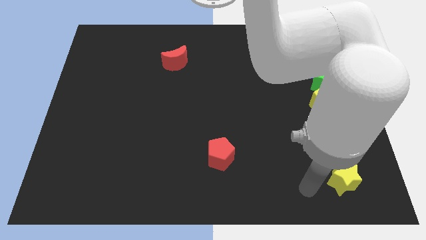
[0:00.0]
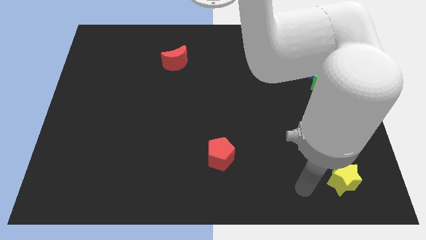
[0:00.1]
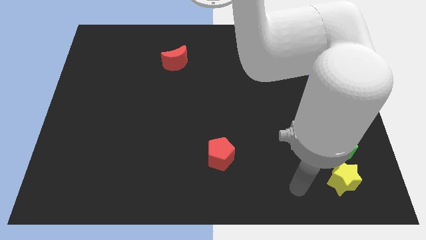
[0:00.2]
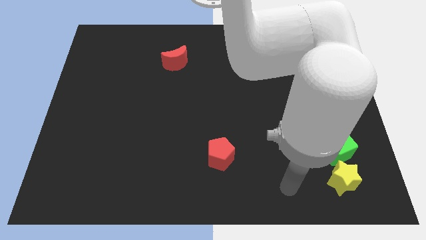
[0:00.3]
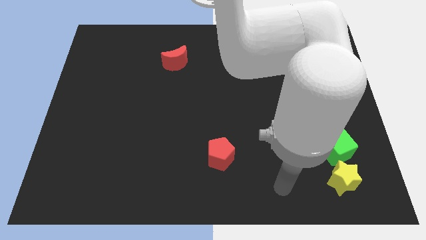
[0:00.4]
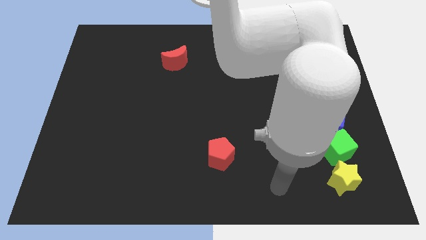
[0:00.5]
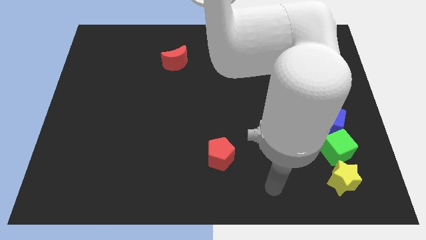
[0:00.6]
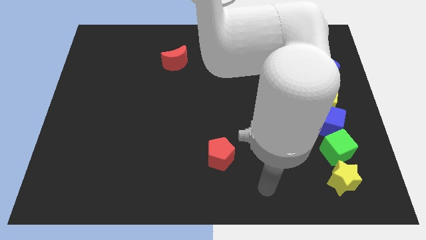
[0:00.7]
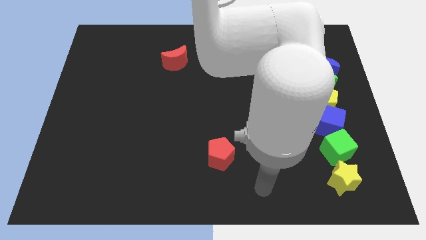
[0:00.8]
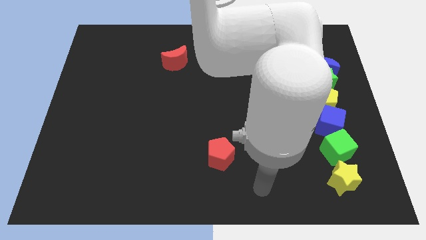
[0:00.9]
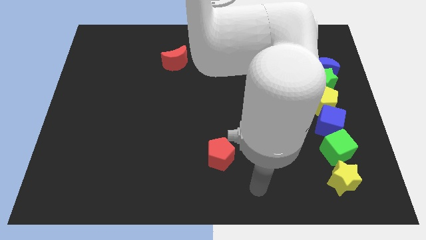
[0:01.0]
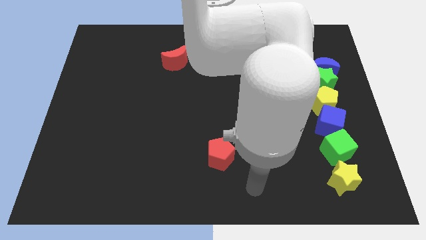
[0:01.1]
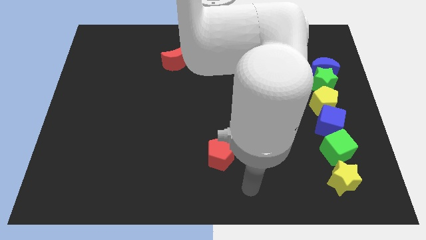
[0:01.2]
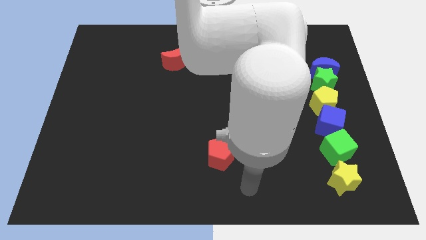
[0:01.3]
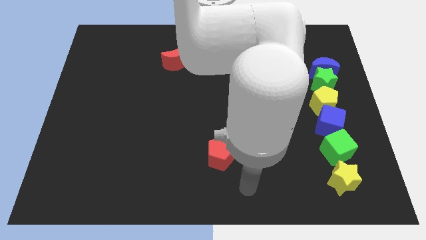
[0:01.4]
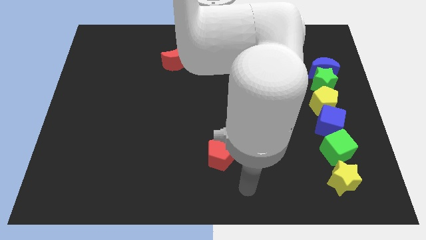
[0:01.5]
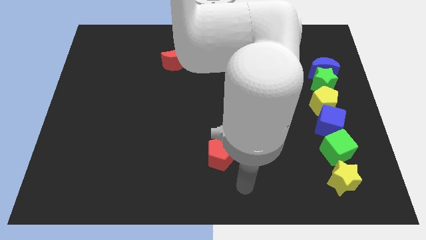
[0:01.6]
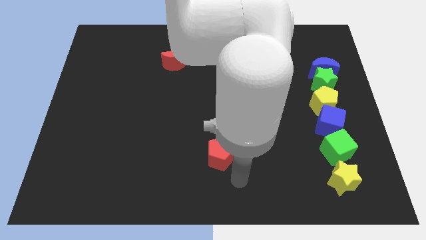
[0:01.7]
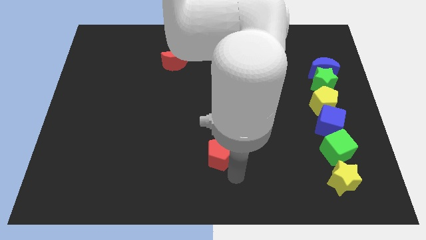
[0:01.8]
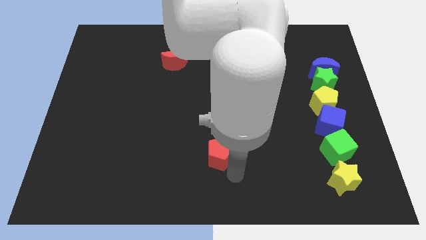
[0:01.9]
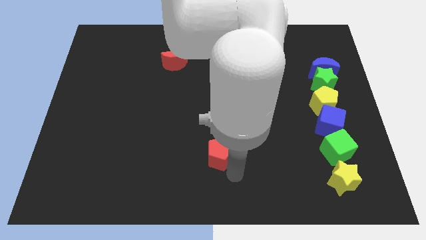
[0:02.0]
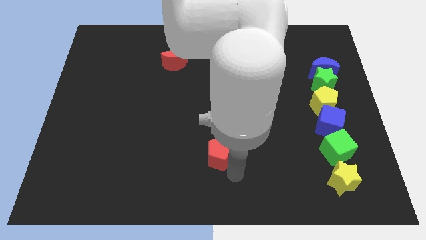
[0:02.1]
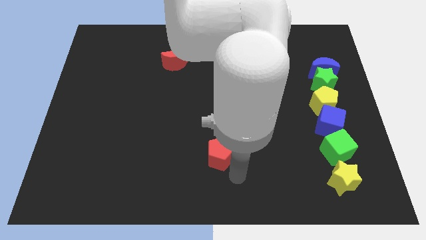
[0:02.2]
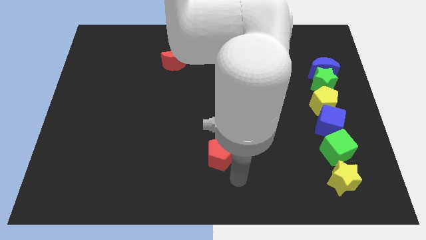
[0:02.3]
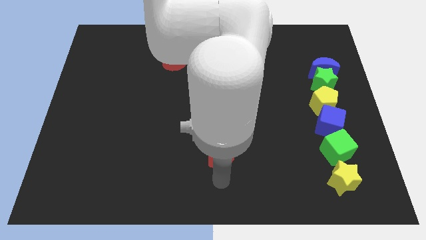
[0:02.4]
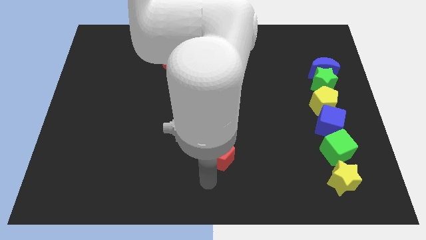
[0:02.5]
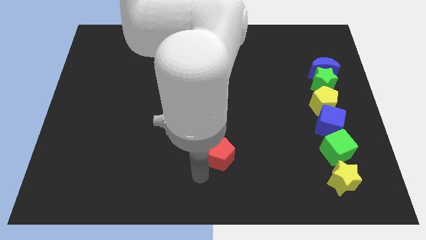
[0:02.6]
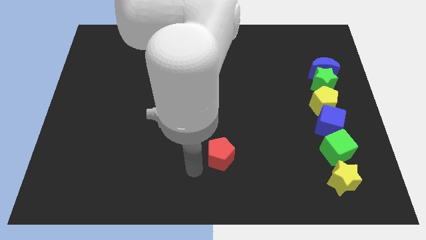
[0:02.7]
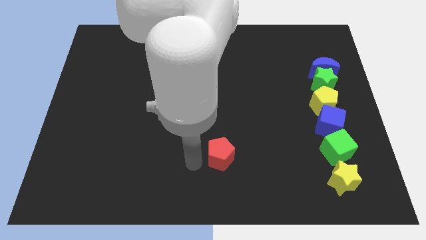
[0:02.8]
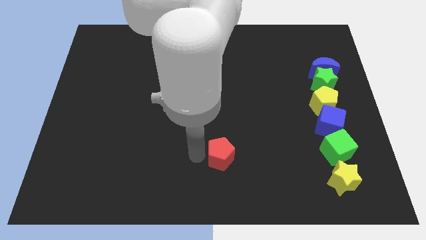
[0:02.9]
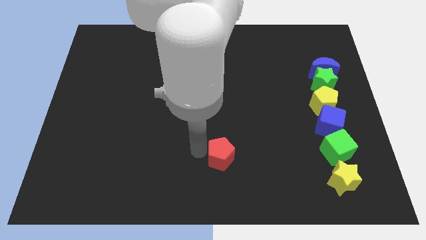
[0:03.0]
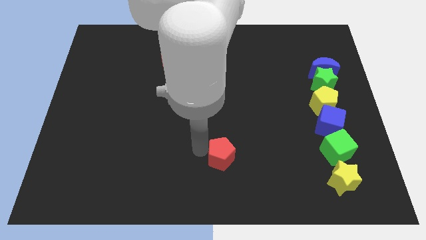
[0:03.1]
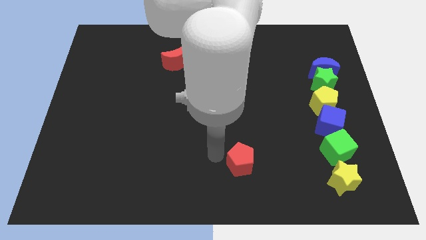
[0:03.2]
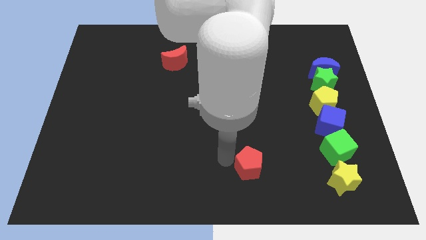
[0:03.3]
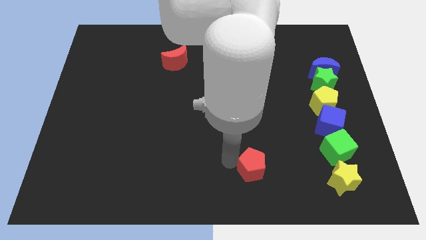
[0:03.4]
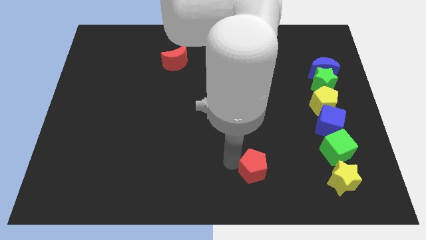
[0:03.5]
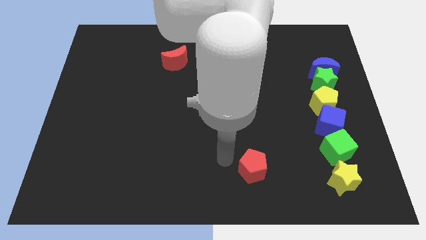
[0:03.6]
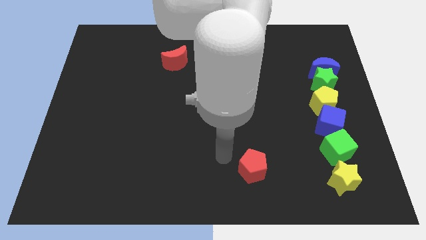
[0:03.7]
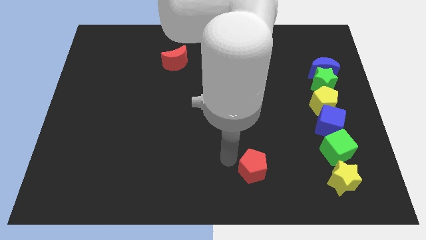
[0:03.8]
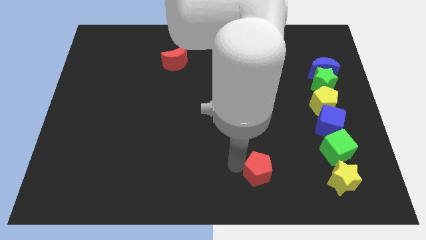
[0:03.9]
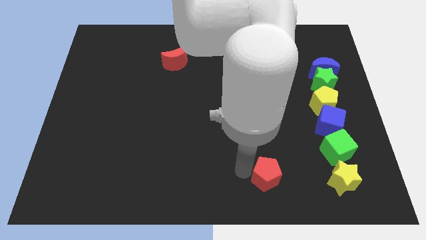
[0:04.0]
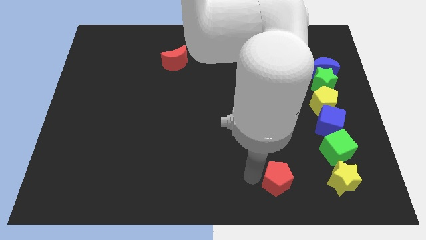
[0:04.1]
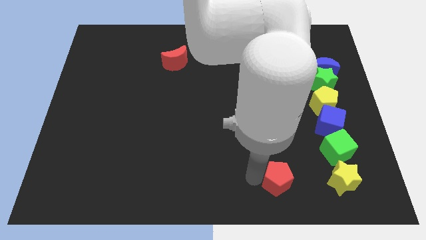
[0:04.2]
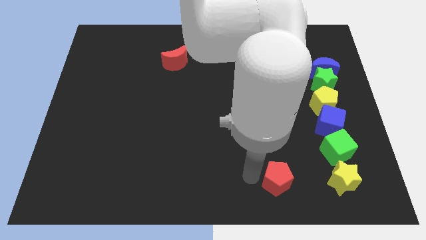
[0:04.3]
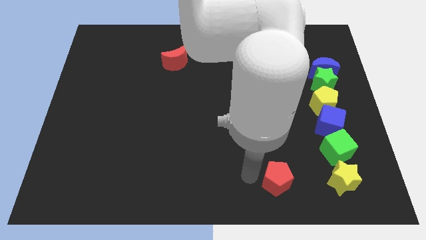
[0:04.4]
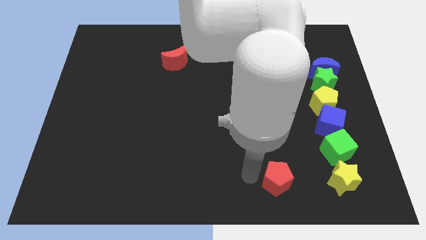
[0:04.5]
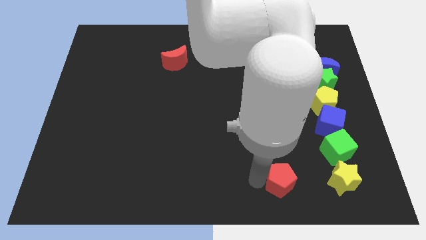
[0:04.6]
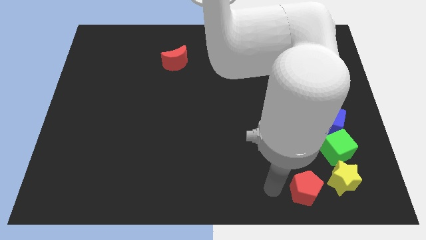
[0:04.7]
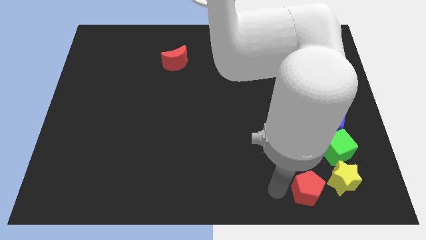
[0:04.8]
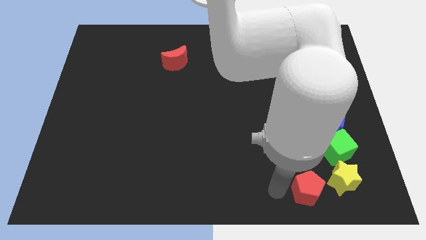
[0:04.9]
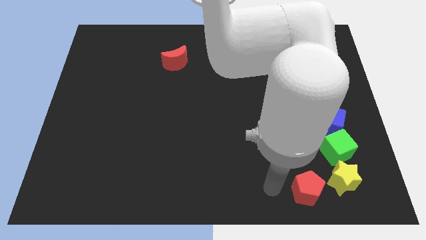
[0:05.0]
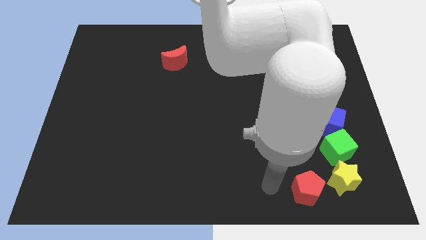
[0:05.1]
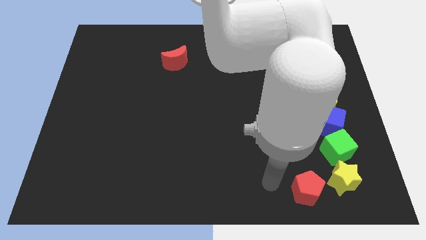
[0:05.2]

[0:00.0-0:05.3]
move the red pentagon to the left of the yellow star

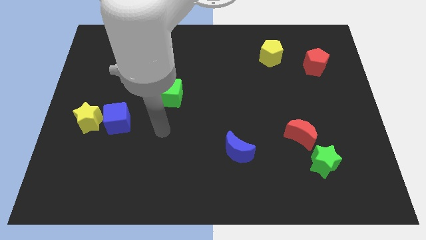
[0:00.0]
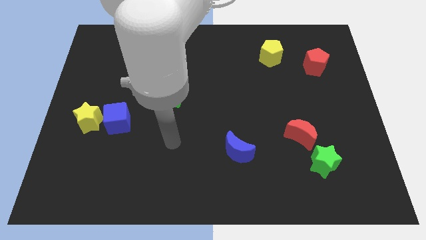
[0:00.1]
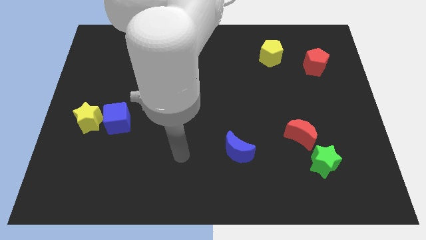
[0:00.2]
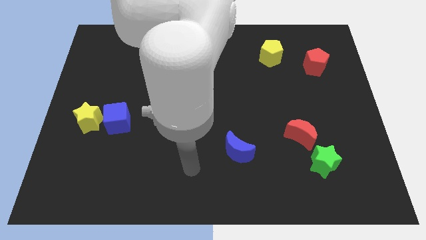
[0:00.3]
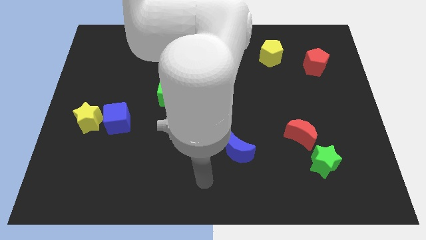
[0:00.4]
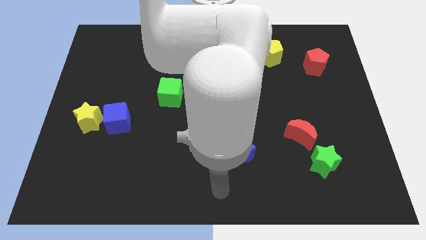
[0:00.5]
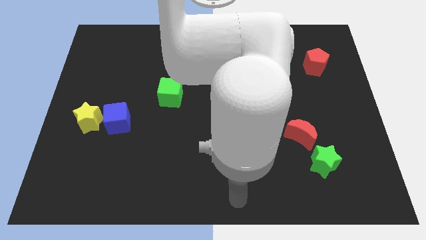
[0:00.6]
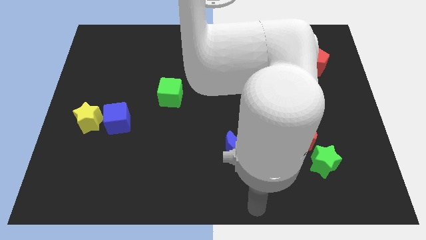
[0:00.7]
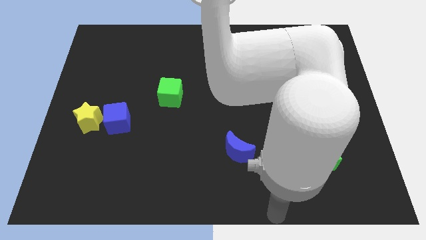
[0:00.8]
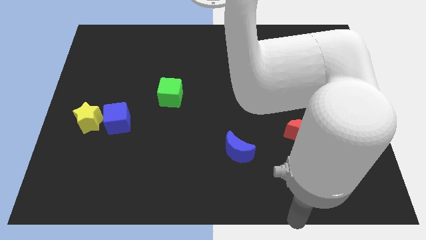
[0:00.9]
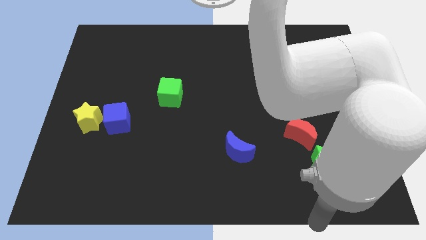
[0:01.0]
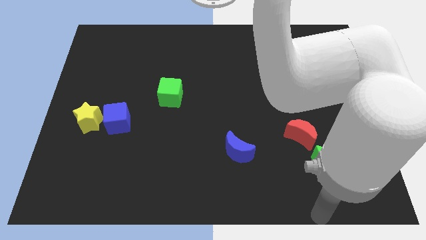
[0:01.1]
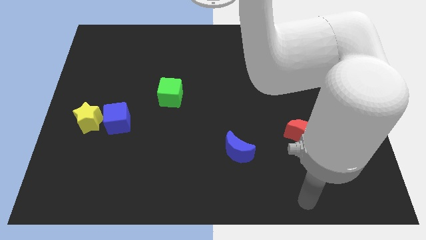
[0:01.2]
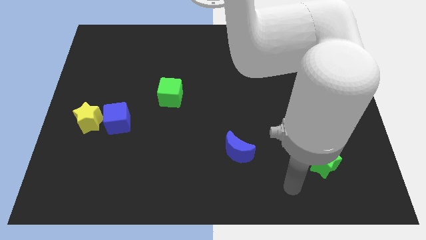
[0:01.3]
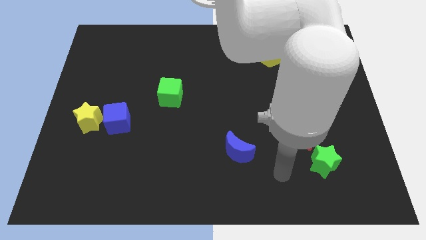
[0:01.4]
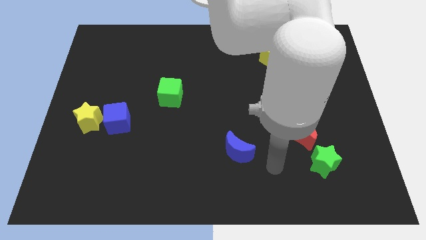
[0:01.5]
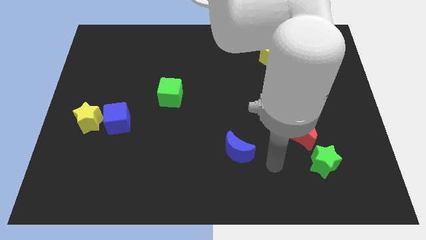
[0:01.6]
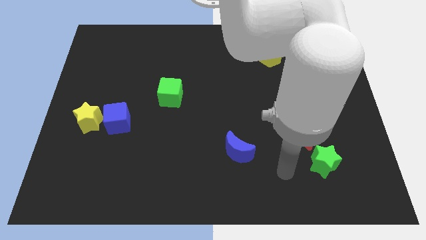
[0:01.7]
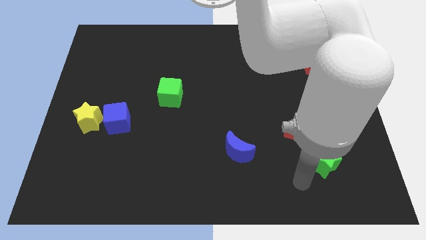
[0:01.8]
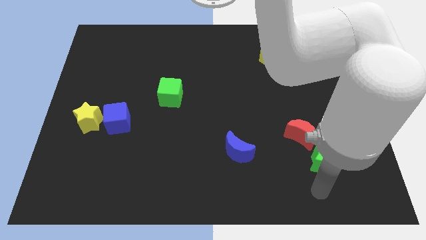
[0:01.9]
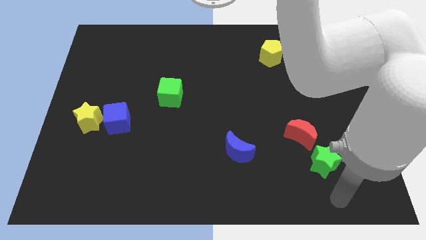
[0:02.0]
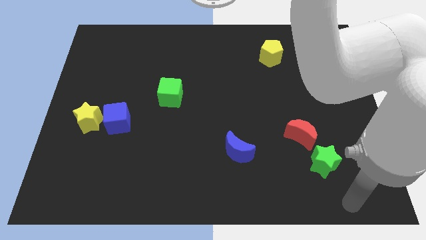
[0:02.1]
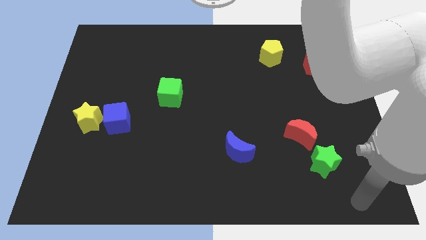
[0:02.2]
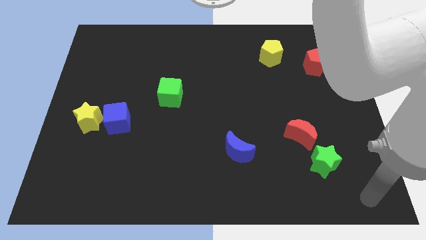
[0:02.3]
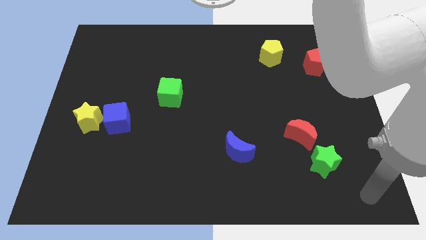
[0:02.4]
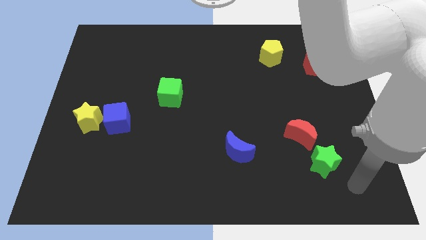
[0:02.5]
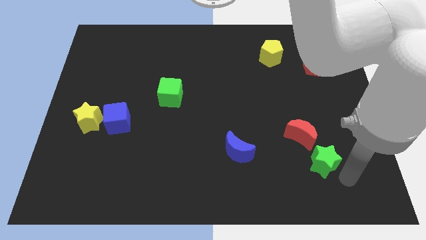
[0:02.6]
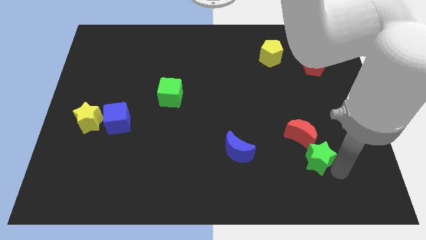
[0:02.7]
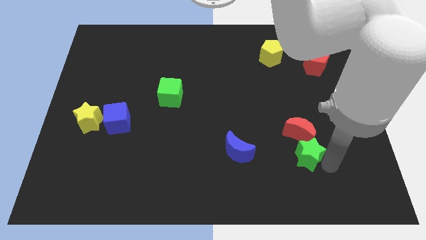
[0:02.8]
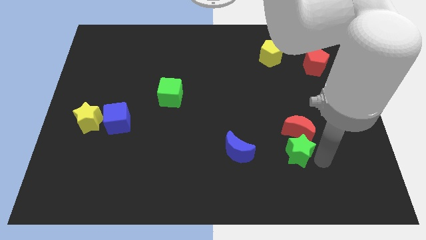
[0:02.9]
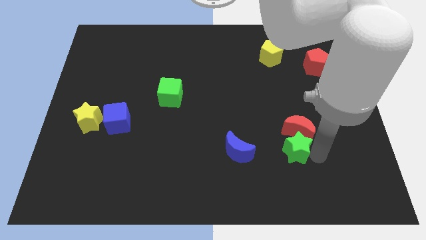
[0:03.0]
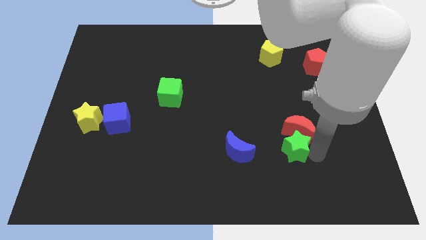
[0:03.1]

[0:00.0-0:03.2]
push green star below red crescent

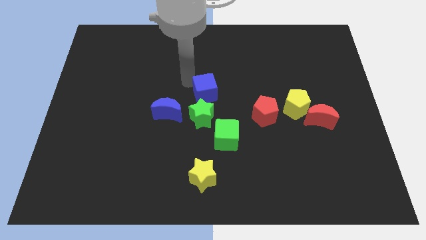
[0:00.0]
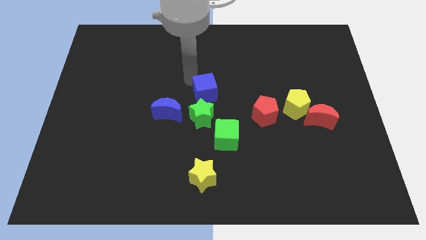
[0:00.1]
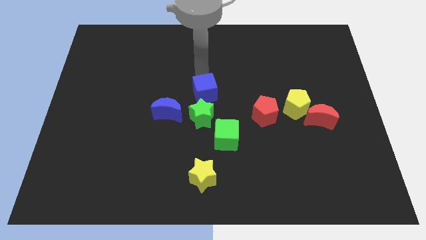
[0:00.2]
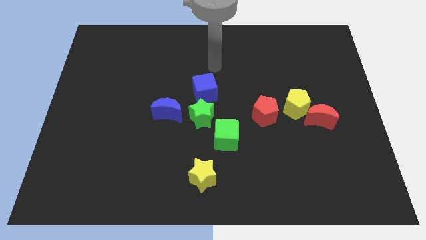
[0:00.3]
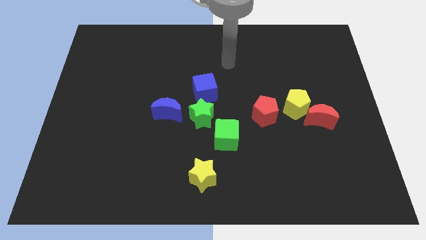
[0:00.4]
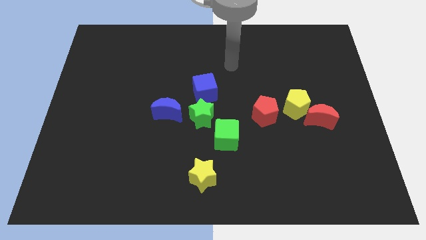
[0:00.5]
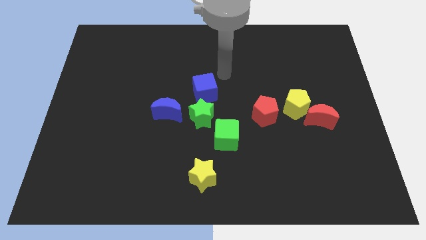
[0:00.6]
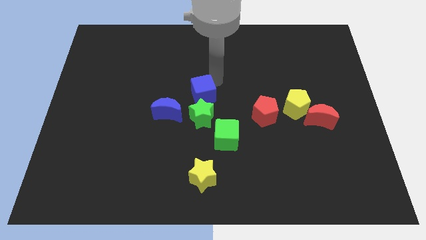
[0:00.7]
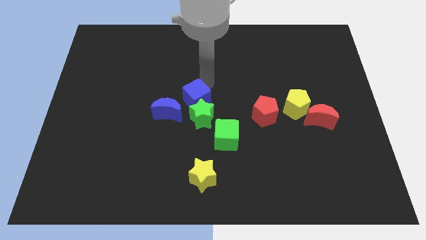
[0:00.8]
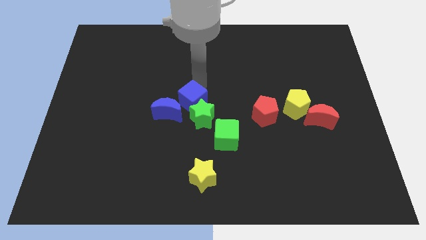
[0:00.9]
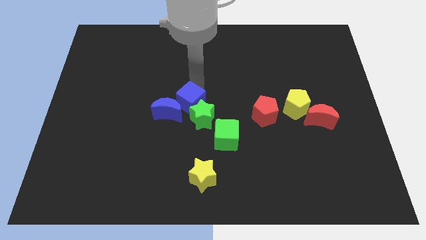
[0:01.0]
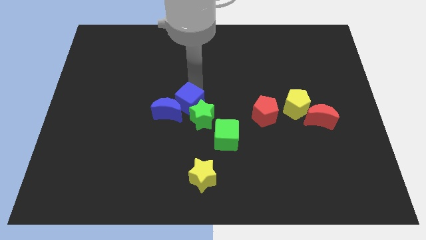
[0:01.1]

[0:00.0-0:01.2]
place blue cube on top left of green star
